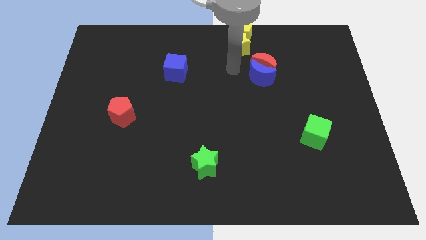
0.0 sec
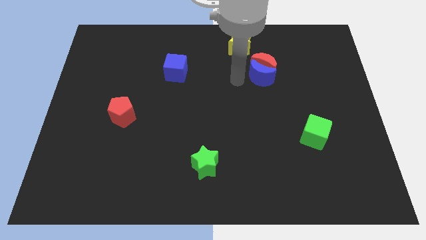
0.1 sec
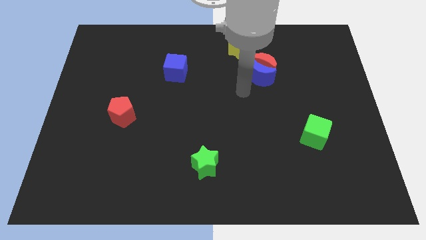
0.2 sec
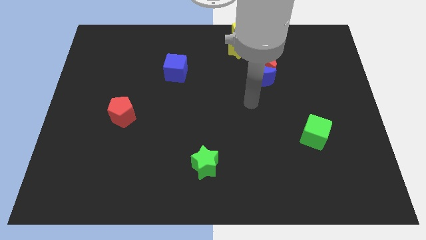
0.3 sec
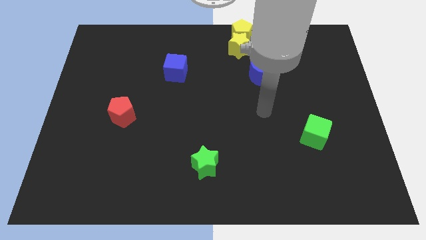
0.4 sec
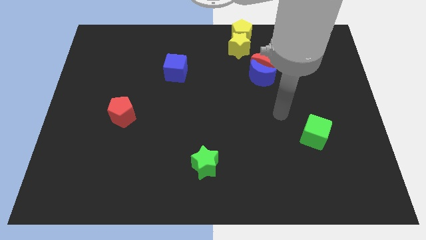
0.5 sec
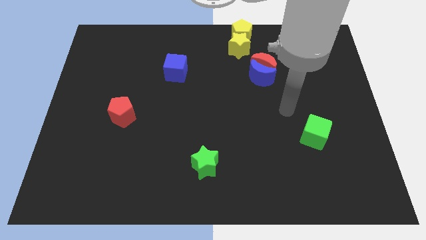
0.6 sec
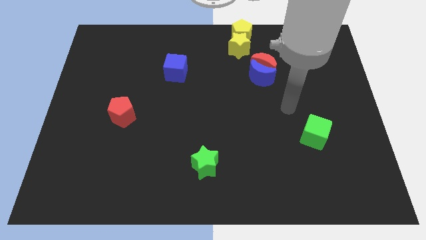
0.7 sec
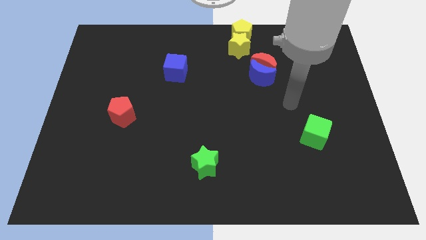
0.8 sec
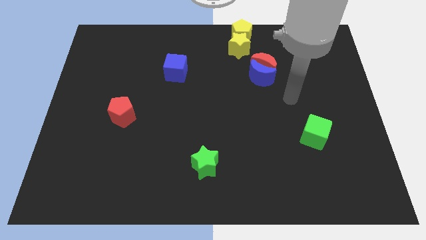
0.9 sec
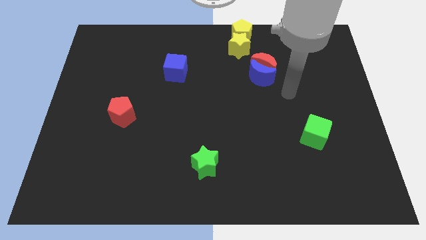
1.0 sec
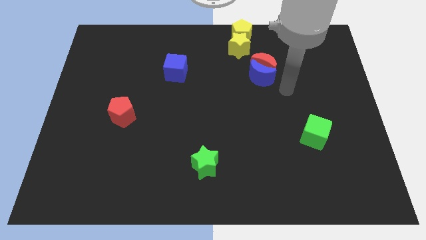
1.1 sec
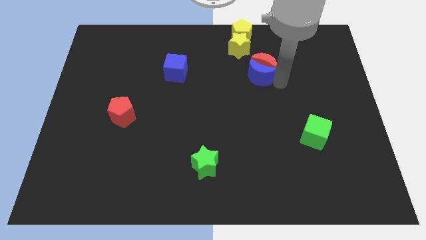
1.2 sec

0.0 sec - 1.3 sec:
move your hand away from the yellow star

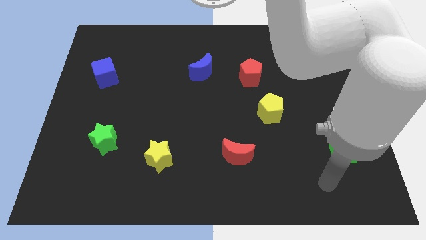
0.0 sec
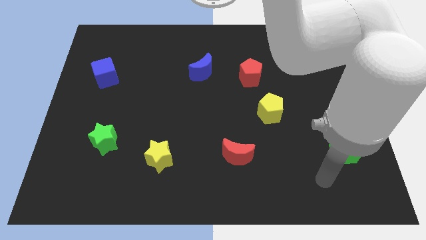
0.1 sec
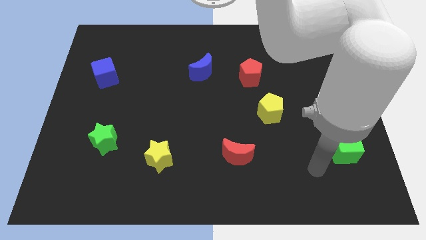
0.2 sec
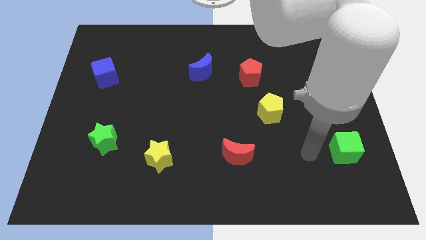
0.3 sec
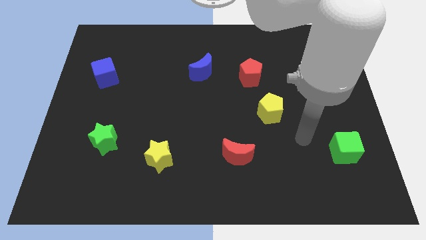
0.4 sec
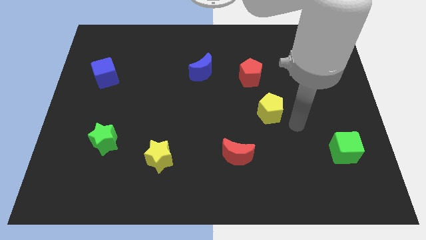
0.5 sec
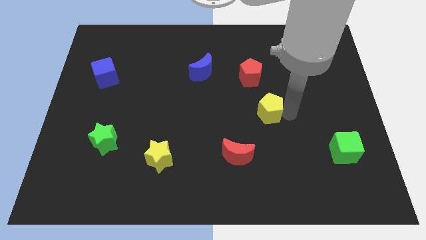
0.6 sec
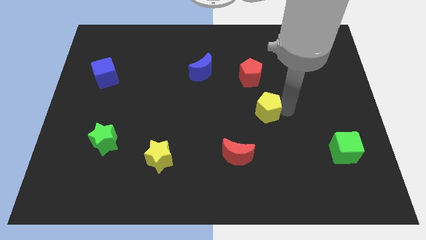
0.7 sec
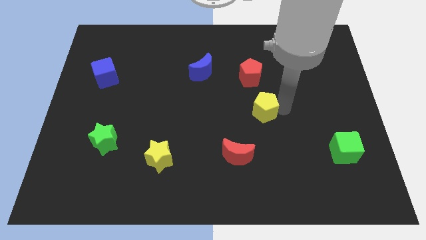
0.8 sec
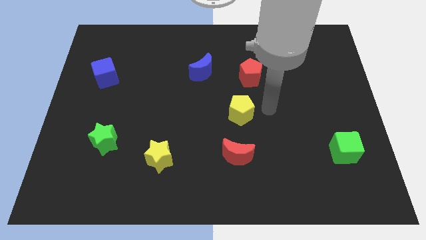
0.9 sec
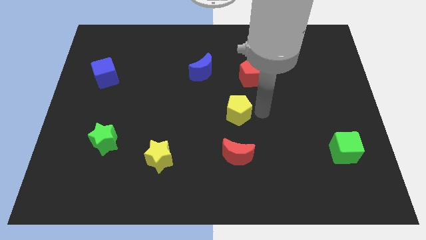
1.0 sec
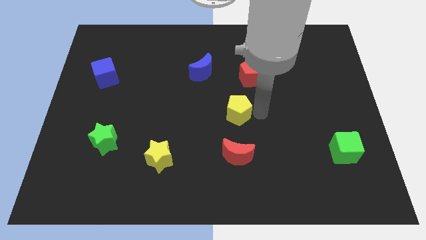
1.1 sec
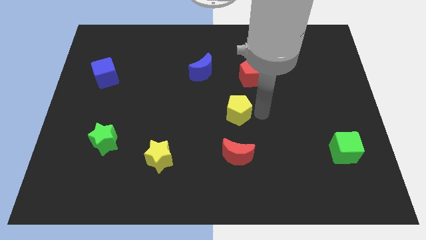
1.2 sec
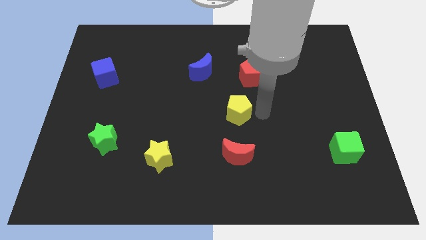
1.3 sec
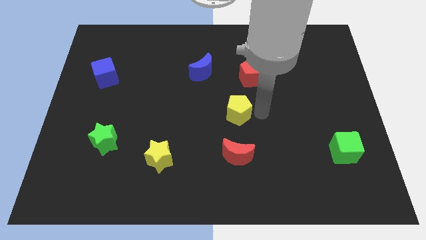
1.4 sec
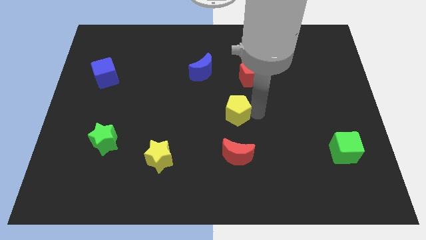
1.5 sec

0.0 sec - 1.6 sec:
place yellow pentagon in between red blocks

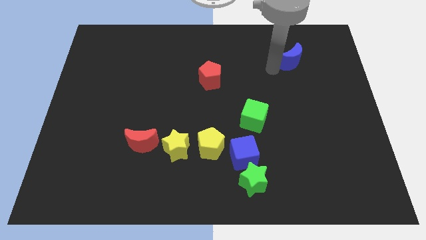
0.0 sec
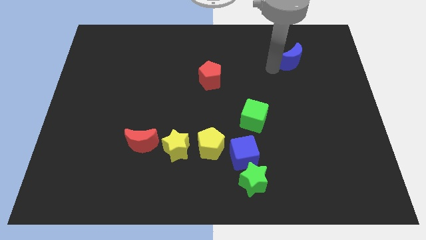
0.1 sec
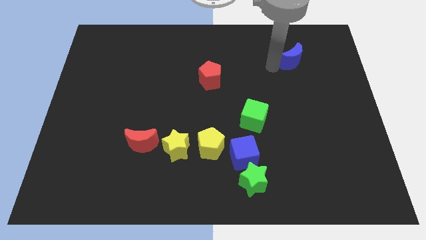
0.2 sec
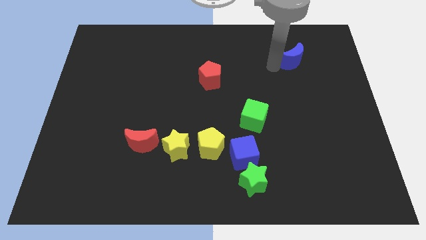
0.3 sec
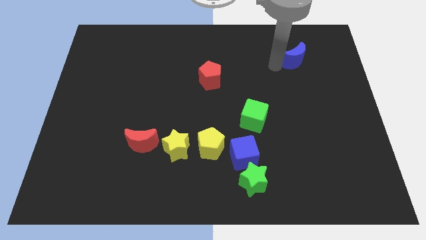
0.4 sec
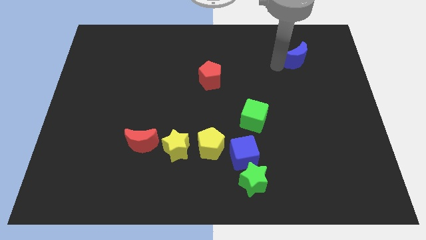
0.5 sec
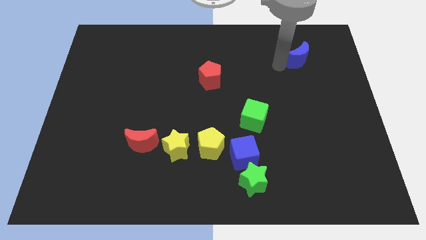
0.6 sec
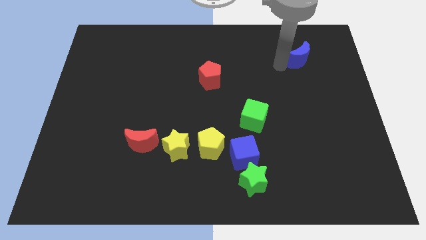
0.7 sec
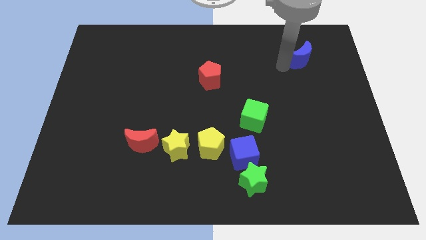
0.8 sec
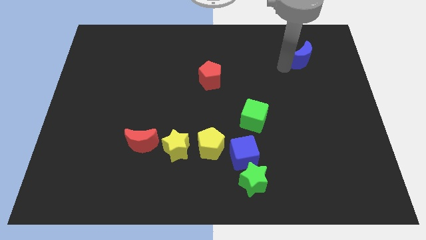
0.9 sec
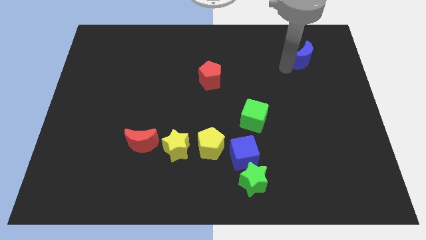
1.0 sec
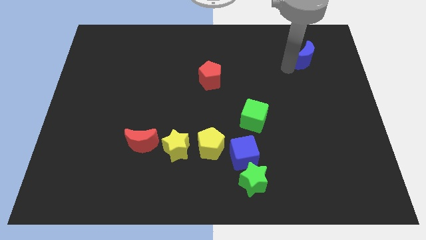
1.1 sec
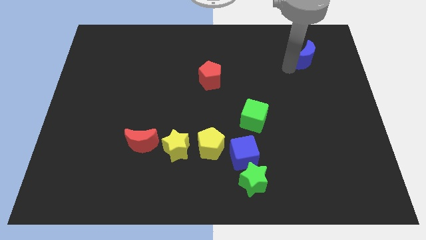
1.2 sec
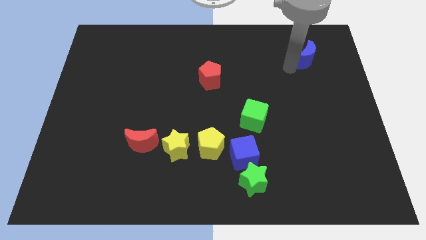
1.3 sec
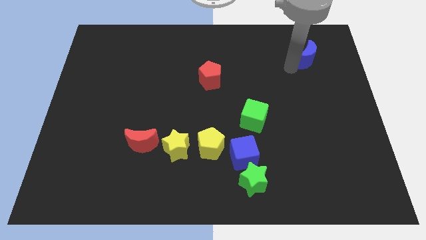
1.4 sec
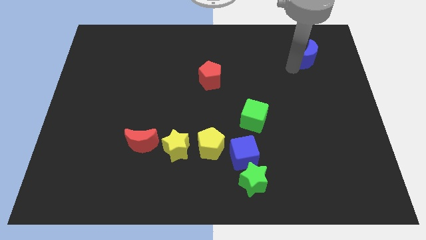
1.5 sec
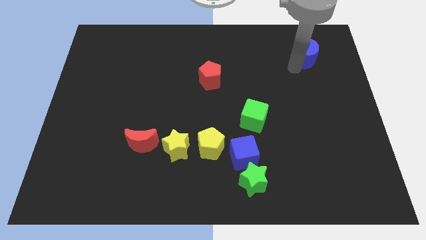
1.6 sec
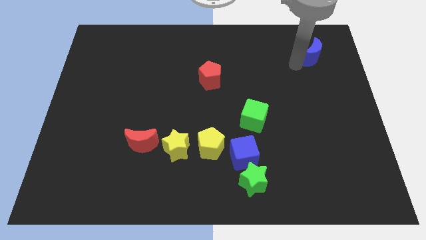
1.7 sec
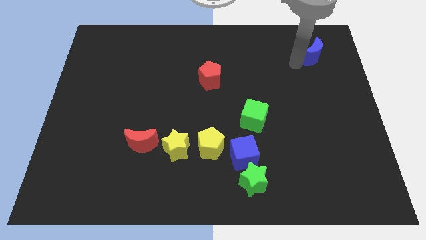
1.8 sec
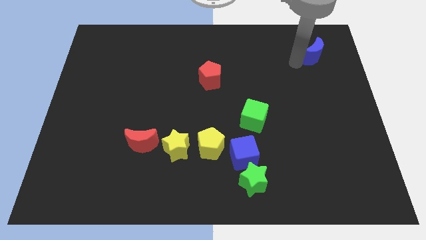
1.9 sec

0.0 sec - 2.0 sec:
move the blue moon towards the top right

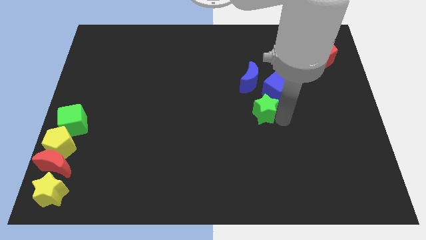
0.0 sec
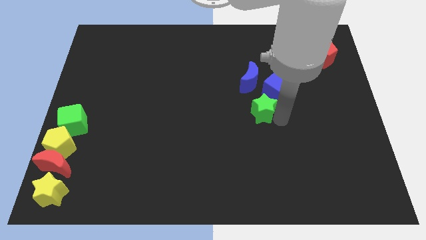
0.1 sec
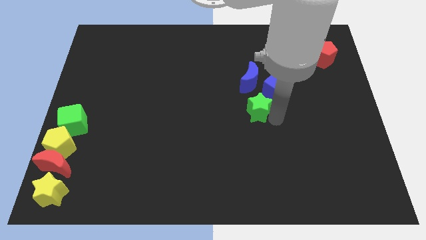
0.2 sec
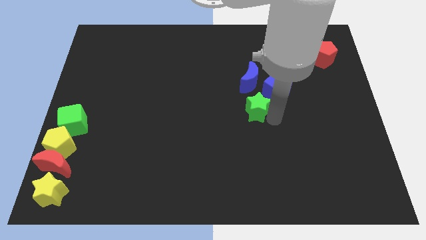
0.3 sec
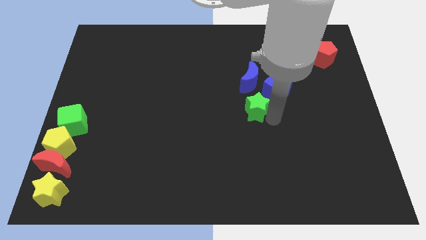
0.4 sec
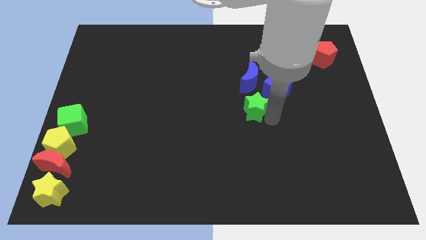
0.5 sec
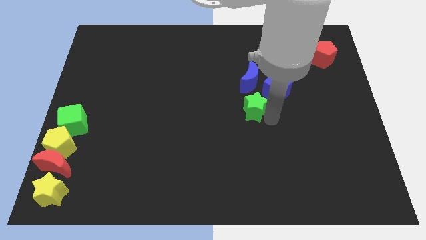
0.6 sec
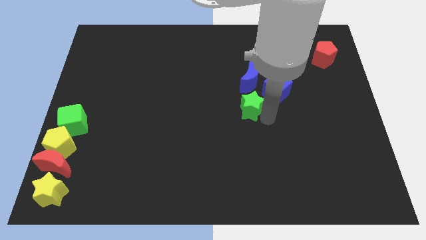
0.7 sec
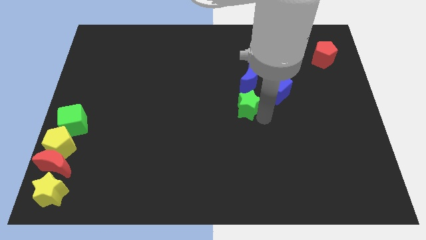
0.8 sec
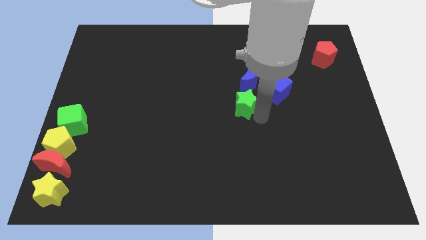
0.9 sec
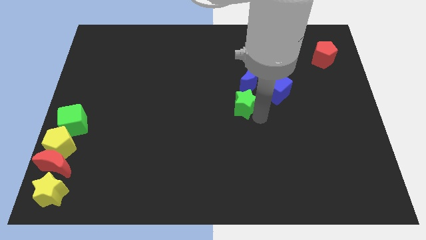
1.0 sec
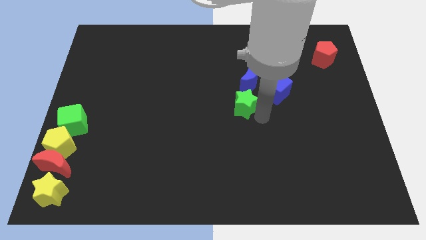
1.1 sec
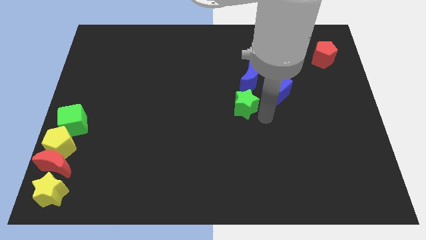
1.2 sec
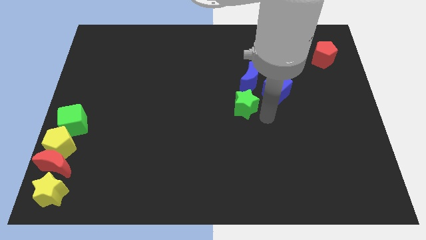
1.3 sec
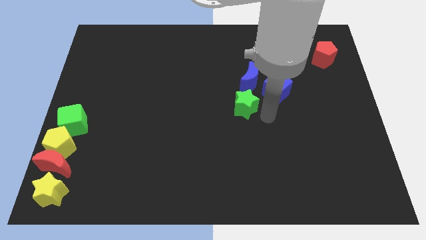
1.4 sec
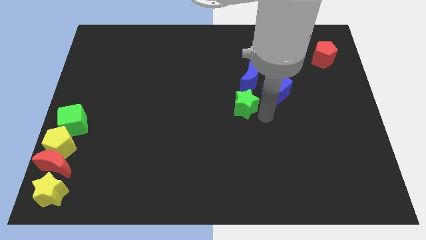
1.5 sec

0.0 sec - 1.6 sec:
push green star below blue crescent

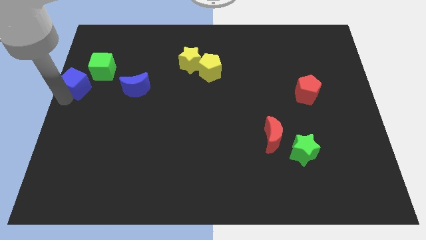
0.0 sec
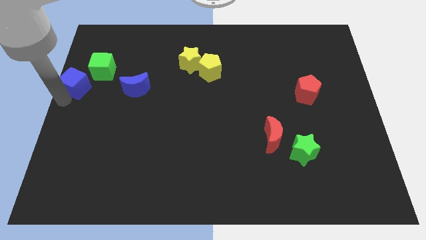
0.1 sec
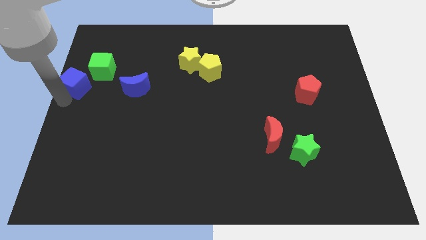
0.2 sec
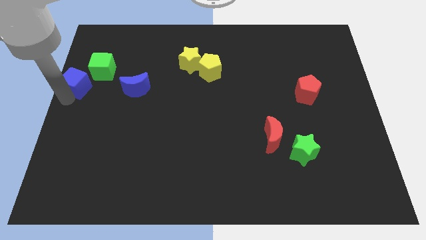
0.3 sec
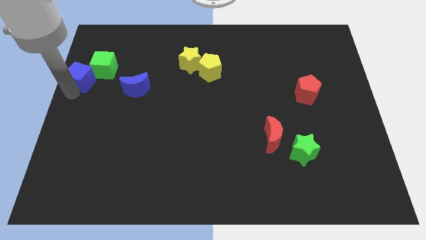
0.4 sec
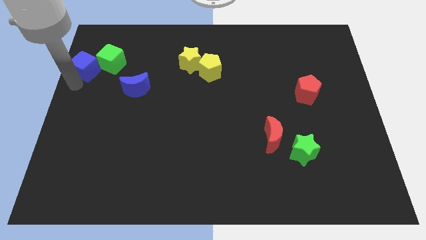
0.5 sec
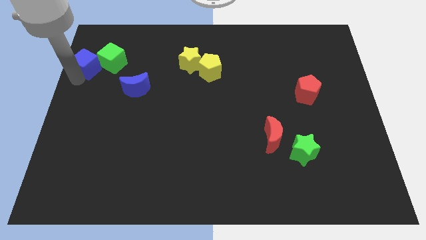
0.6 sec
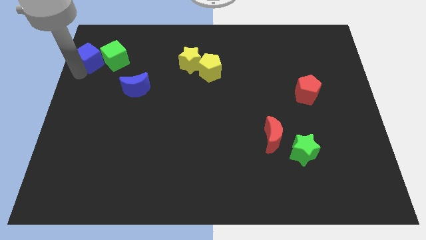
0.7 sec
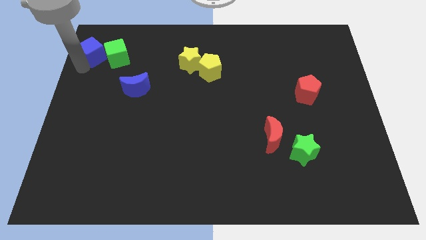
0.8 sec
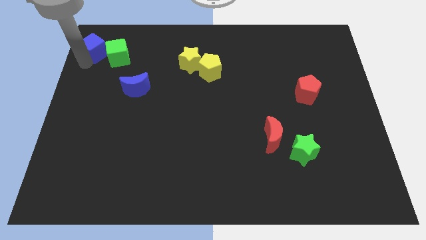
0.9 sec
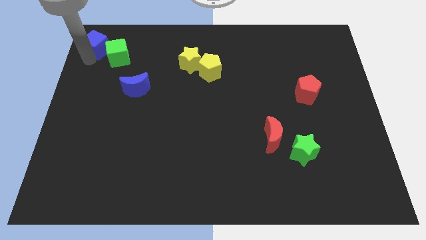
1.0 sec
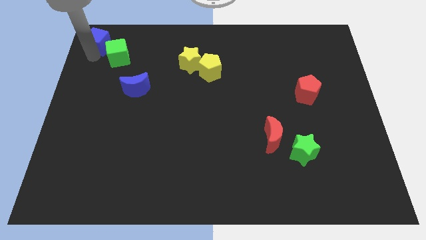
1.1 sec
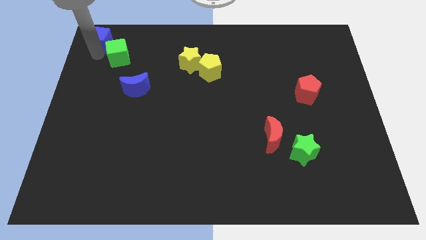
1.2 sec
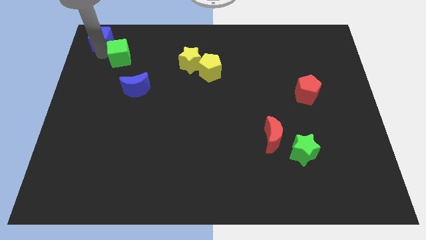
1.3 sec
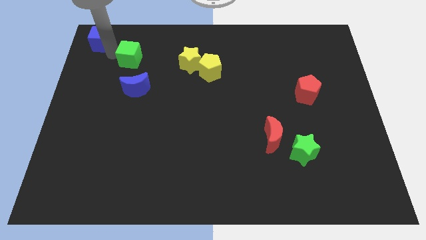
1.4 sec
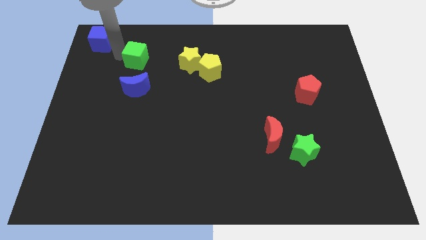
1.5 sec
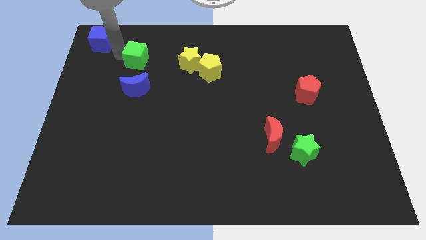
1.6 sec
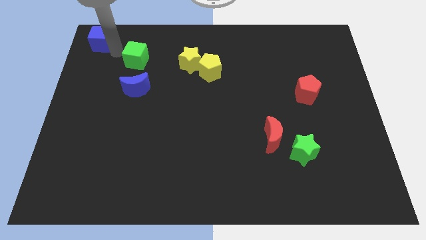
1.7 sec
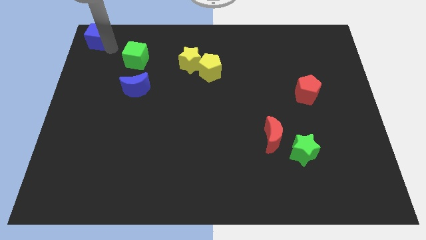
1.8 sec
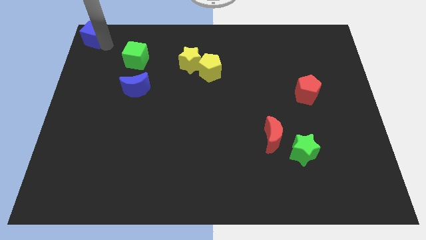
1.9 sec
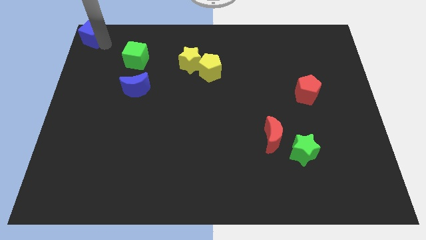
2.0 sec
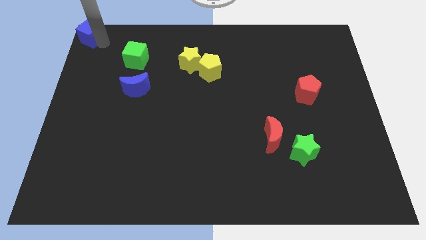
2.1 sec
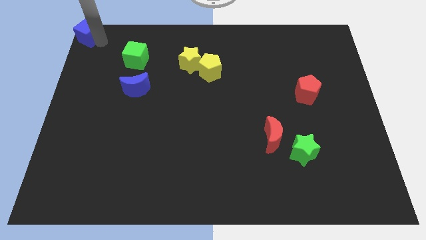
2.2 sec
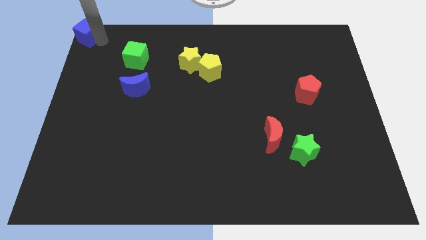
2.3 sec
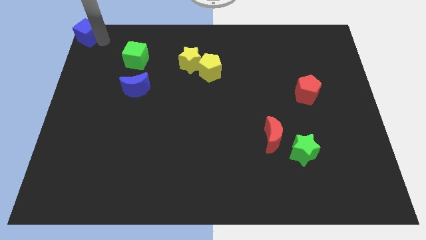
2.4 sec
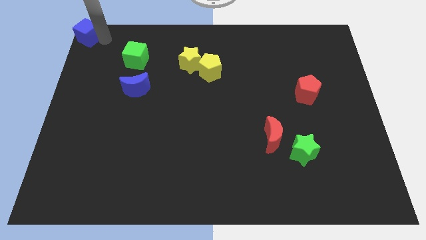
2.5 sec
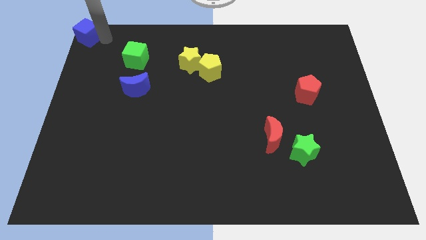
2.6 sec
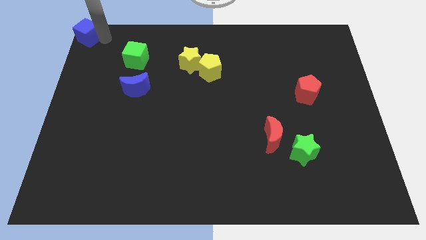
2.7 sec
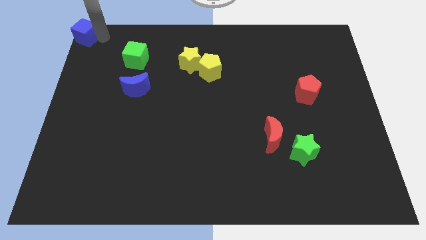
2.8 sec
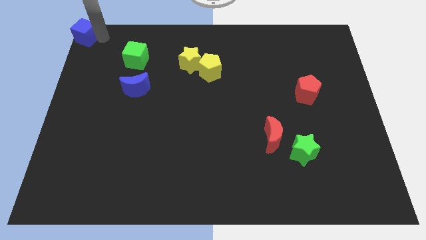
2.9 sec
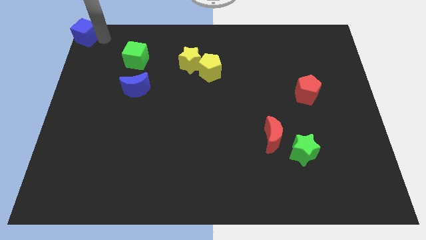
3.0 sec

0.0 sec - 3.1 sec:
place the blue cube at the top left corner of the board
